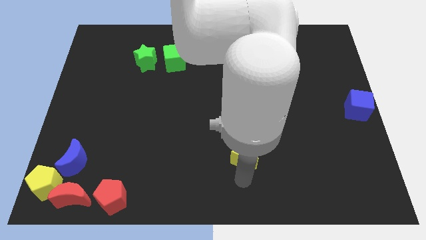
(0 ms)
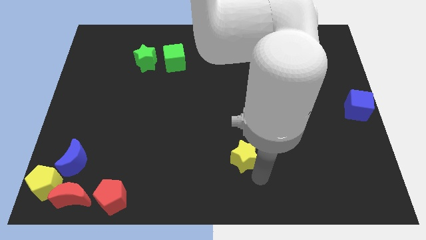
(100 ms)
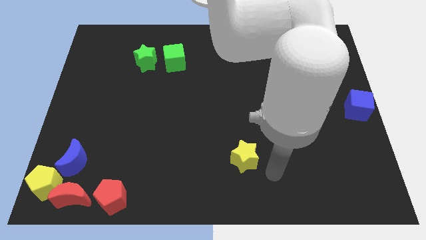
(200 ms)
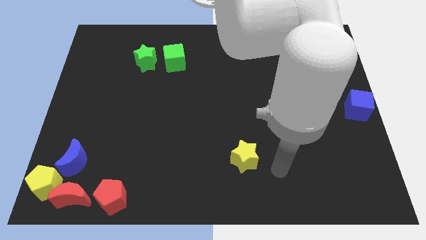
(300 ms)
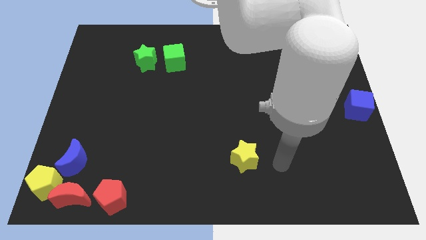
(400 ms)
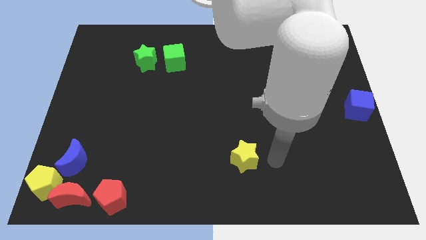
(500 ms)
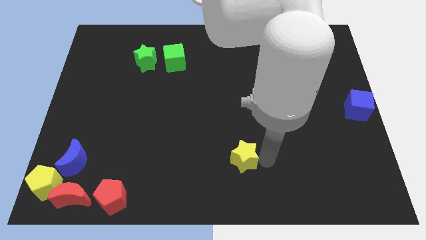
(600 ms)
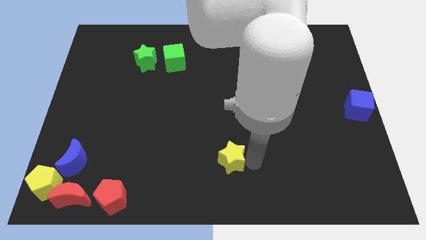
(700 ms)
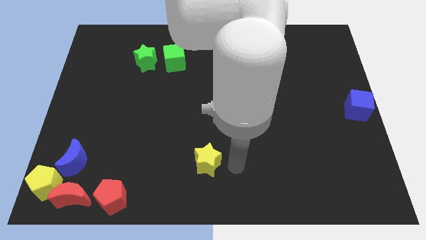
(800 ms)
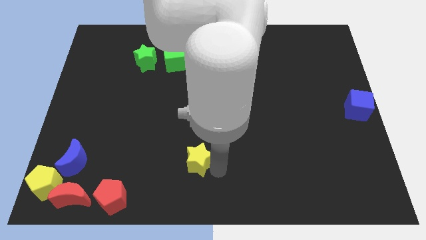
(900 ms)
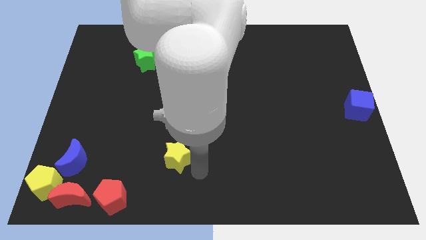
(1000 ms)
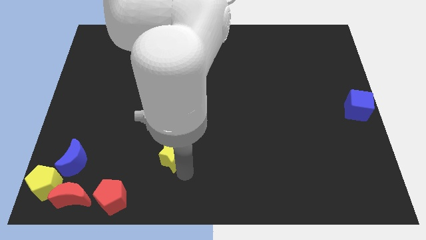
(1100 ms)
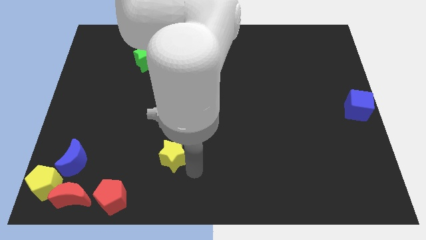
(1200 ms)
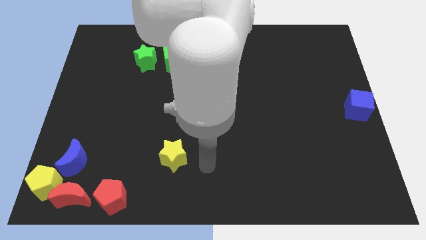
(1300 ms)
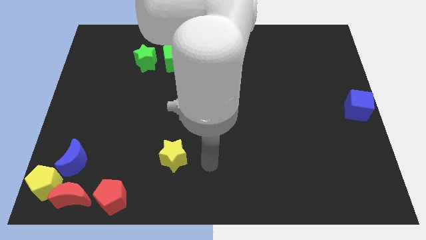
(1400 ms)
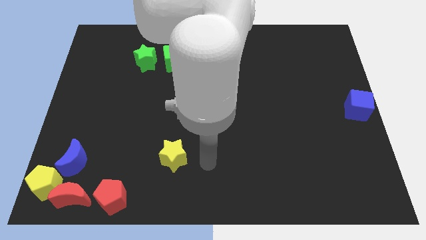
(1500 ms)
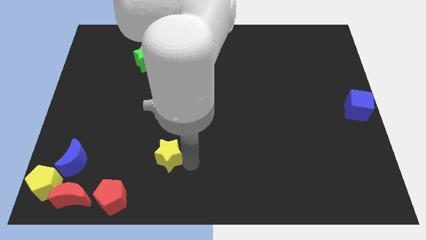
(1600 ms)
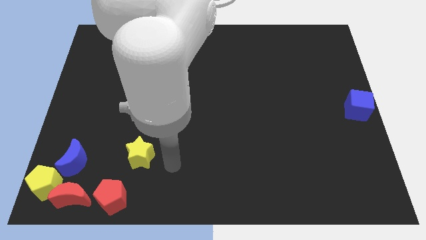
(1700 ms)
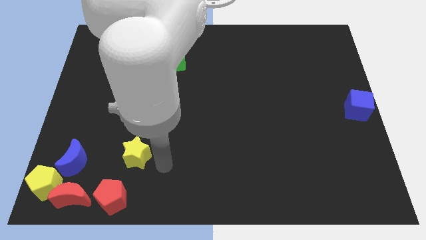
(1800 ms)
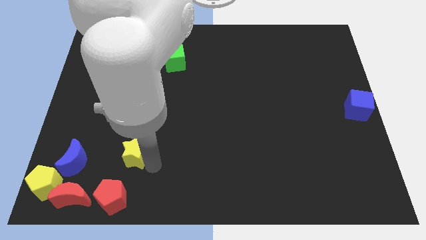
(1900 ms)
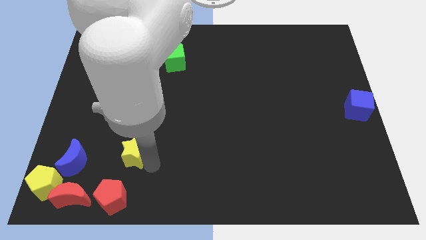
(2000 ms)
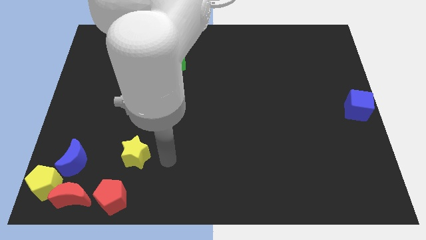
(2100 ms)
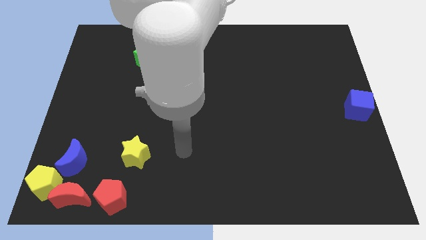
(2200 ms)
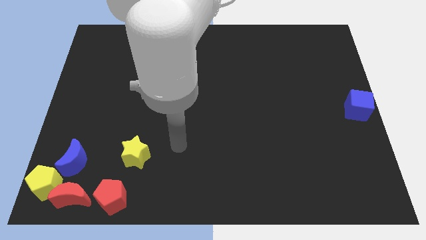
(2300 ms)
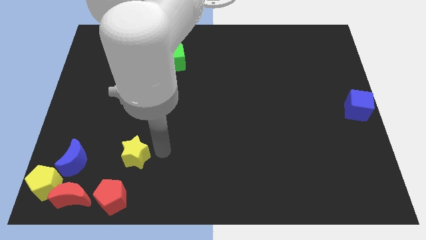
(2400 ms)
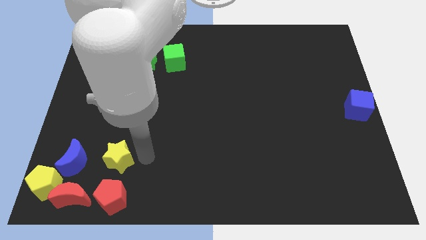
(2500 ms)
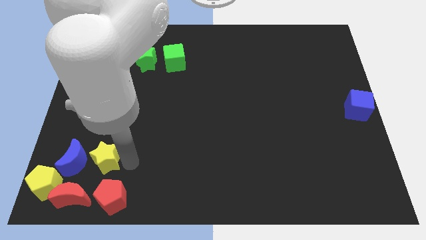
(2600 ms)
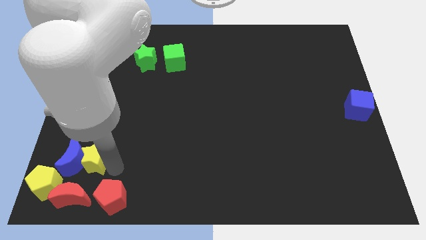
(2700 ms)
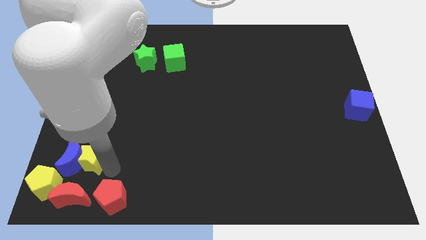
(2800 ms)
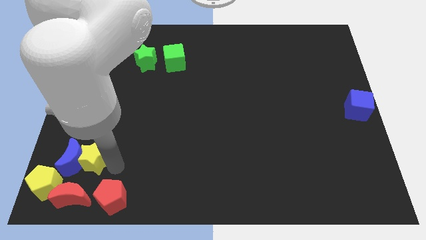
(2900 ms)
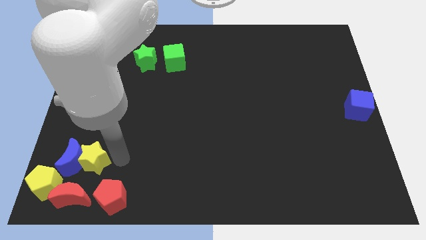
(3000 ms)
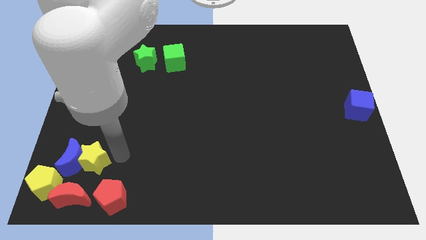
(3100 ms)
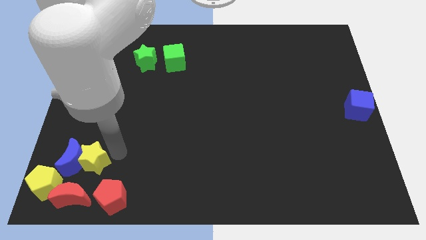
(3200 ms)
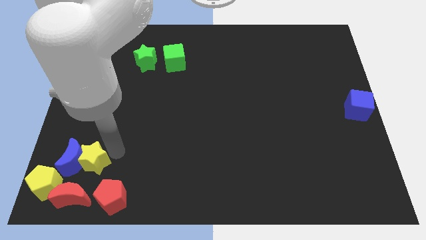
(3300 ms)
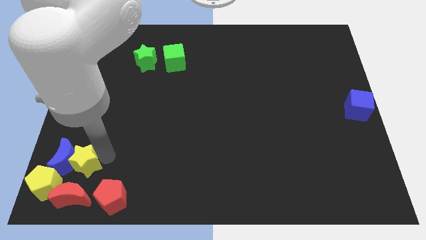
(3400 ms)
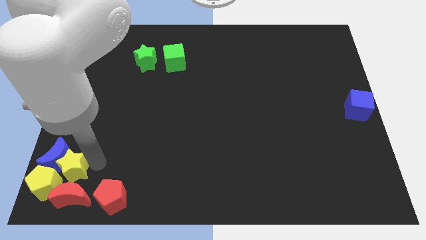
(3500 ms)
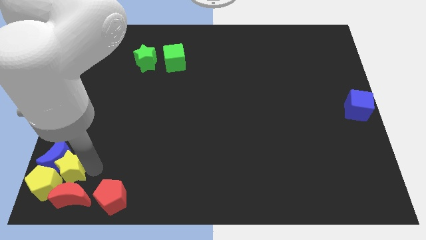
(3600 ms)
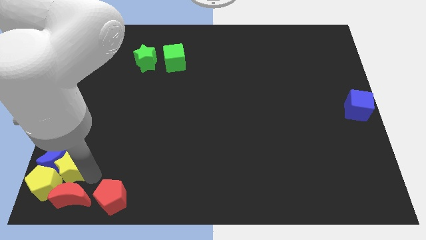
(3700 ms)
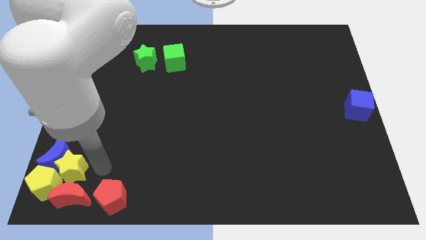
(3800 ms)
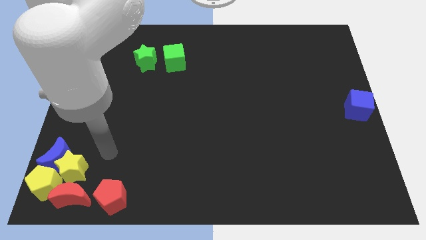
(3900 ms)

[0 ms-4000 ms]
push the yellow star towards the bottom left corner

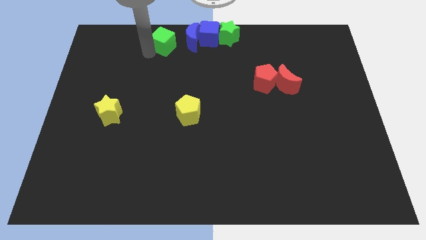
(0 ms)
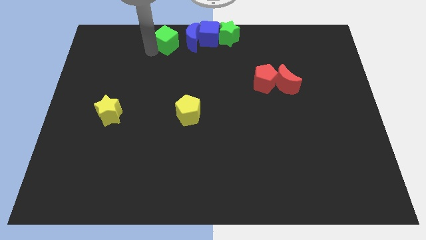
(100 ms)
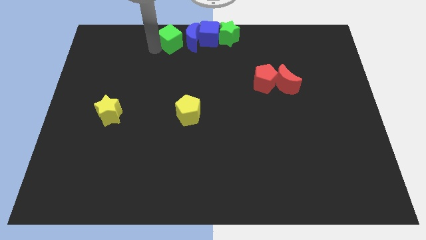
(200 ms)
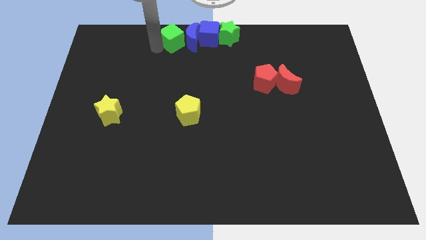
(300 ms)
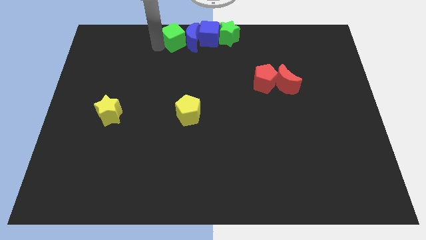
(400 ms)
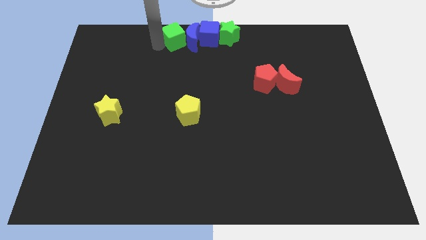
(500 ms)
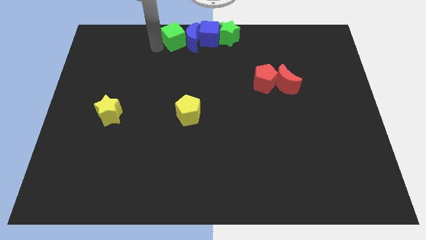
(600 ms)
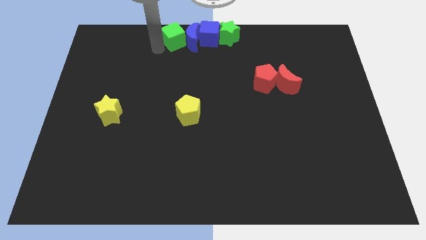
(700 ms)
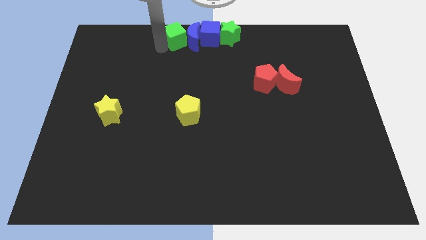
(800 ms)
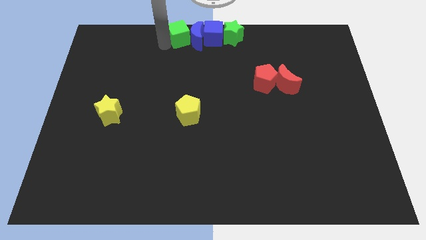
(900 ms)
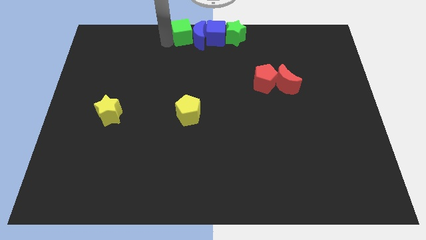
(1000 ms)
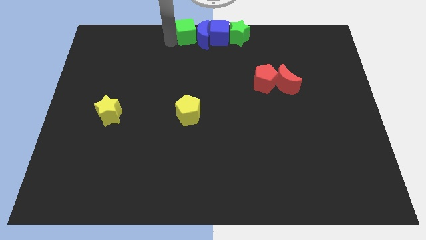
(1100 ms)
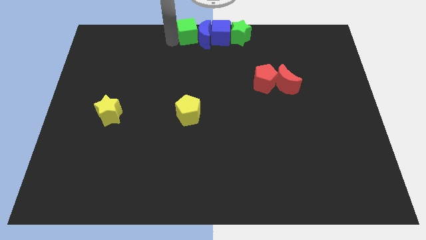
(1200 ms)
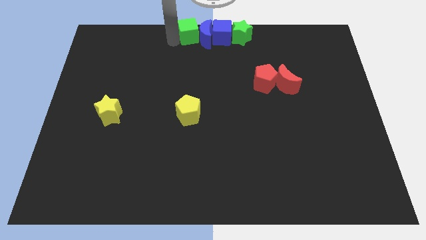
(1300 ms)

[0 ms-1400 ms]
place the green cube on the left side of the blue moon

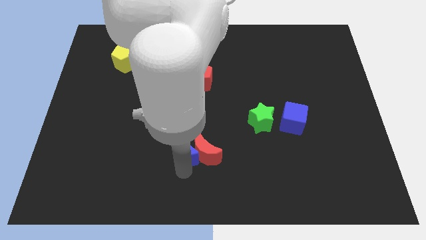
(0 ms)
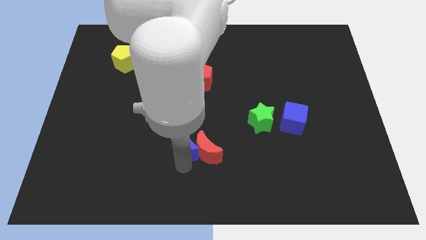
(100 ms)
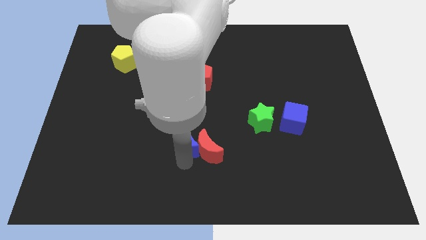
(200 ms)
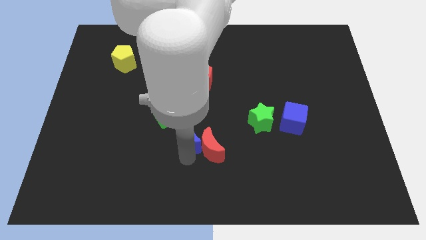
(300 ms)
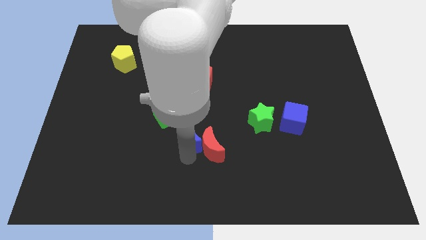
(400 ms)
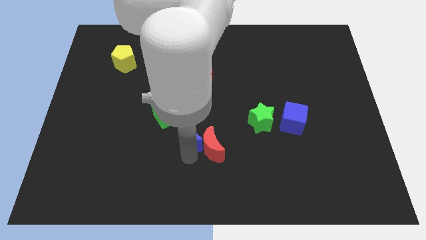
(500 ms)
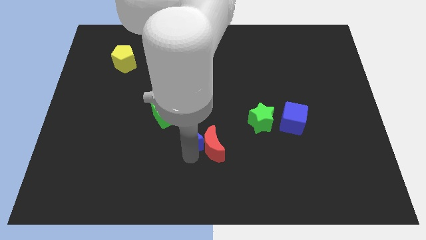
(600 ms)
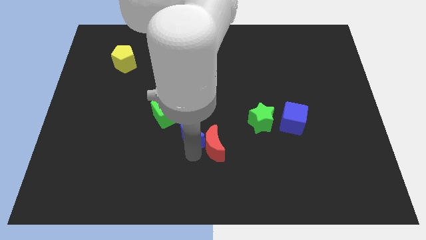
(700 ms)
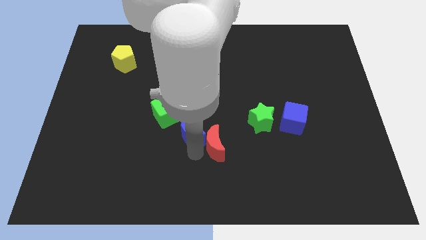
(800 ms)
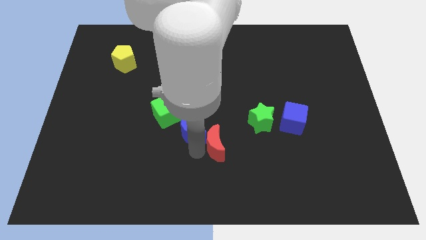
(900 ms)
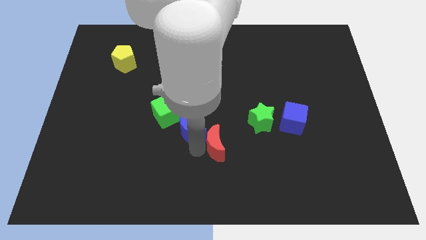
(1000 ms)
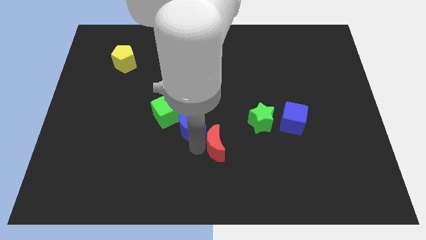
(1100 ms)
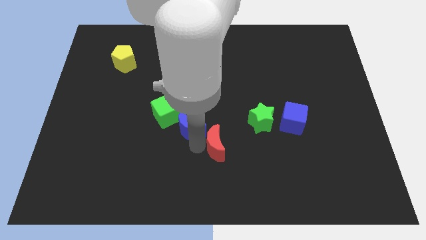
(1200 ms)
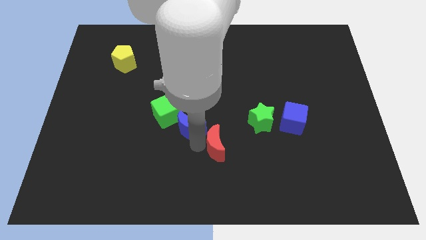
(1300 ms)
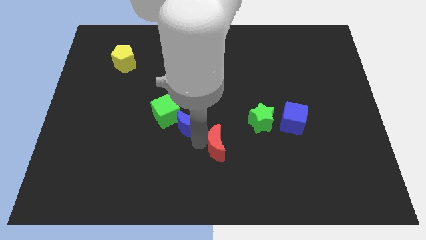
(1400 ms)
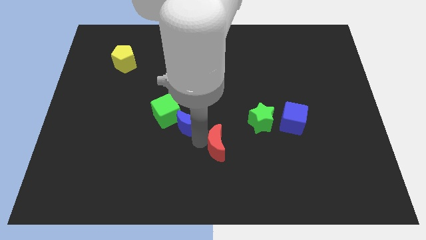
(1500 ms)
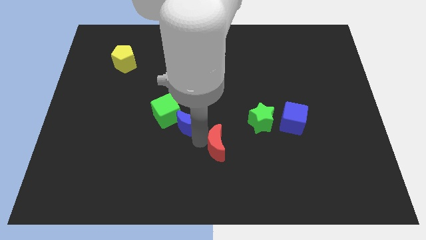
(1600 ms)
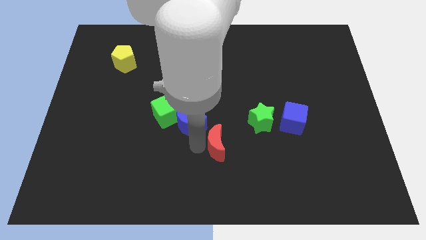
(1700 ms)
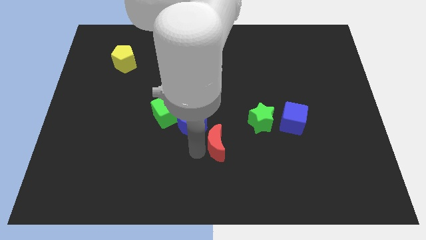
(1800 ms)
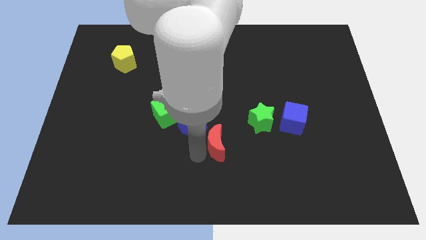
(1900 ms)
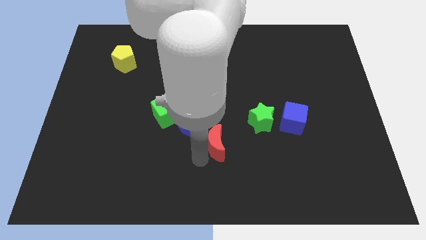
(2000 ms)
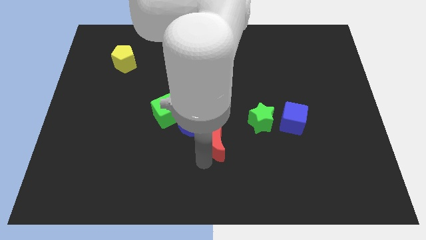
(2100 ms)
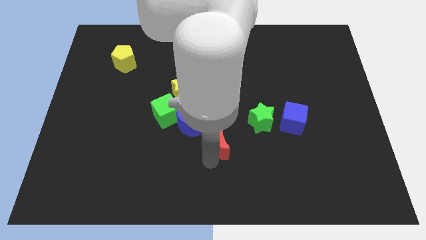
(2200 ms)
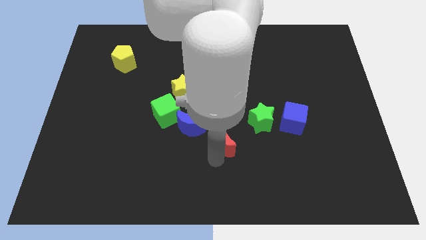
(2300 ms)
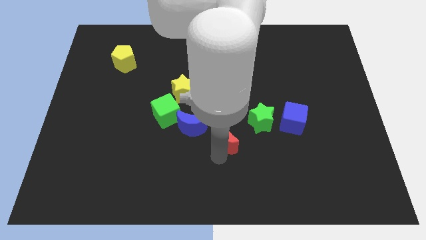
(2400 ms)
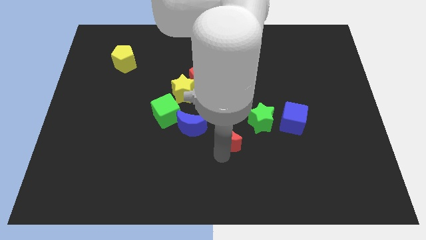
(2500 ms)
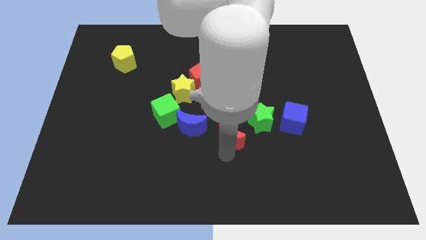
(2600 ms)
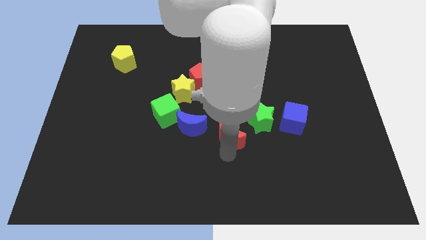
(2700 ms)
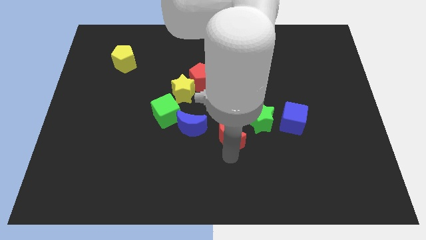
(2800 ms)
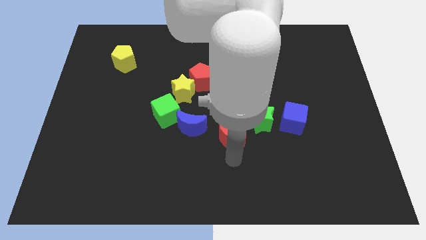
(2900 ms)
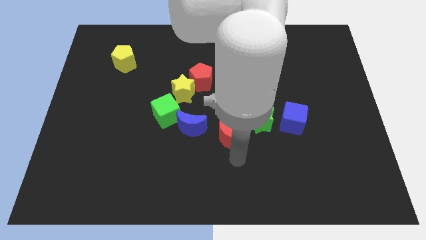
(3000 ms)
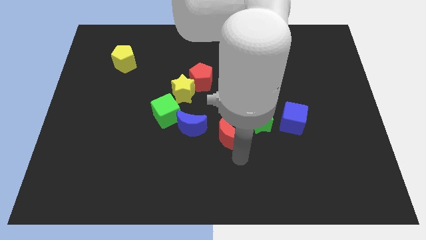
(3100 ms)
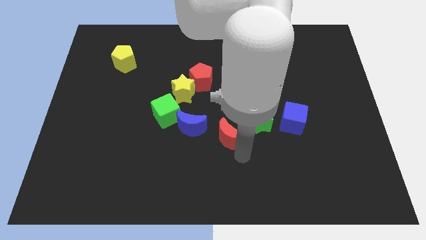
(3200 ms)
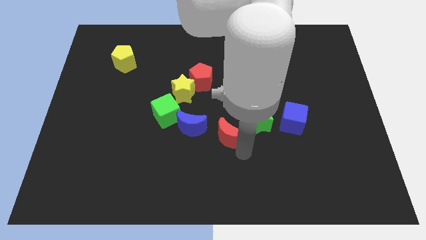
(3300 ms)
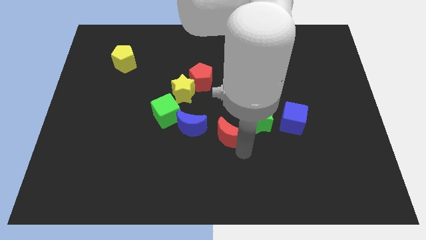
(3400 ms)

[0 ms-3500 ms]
place the moons diagonally to green cube

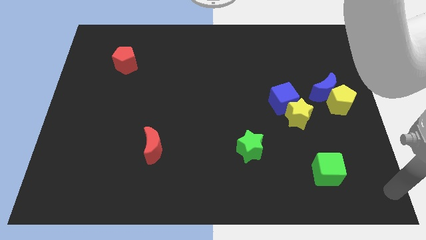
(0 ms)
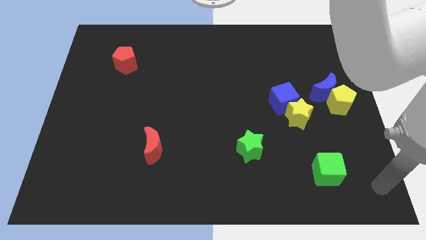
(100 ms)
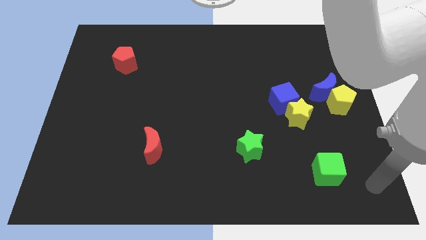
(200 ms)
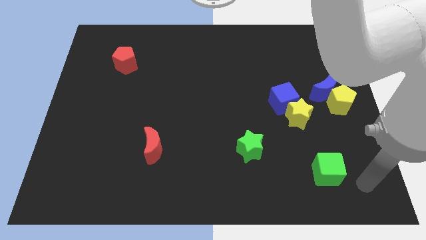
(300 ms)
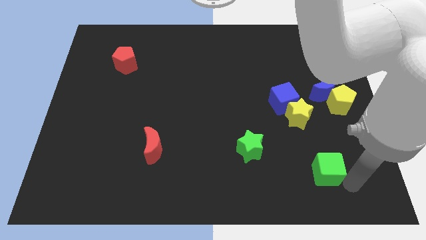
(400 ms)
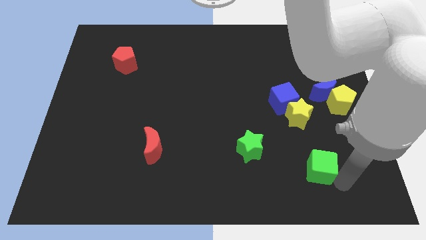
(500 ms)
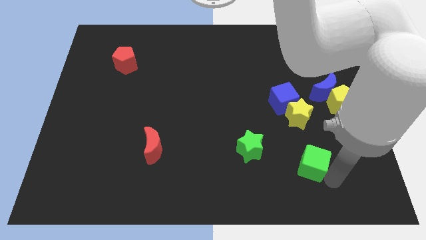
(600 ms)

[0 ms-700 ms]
push green cube below yellow star
